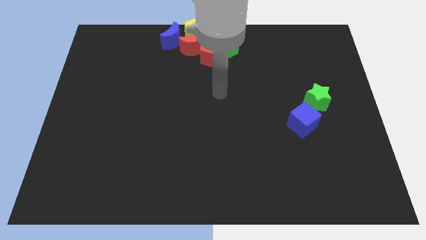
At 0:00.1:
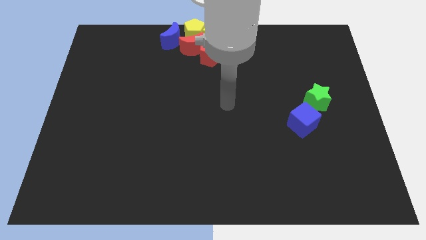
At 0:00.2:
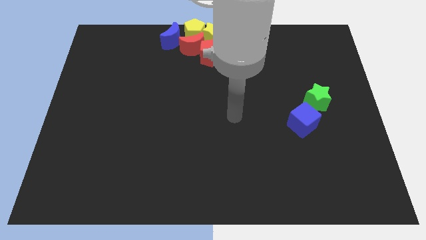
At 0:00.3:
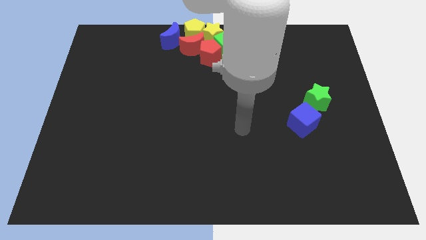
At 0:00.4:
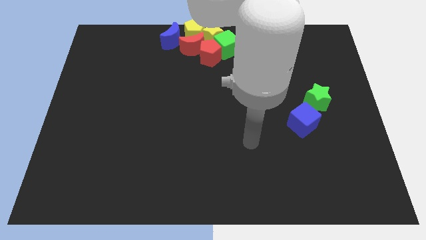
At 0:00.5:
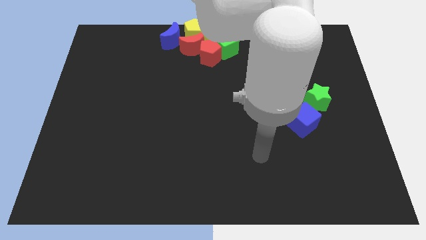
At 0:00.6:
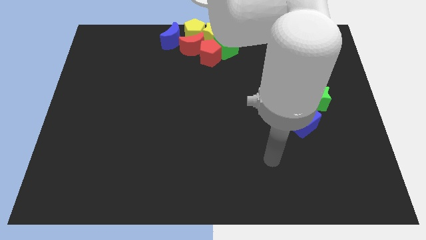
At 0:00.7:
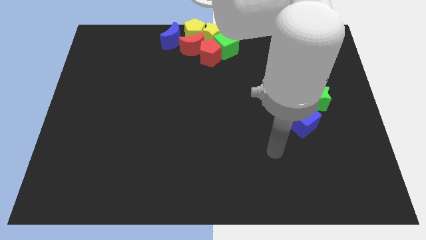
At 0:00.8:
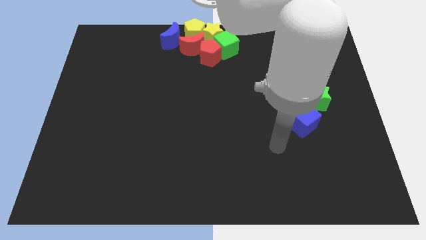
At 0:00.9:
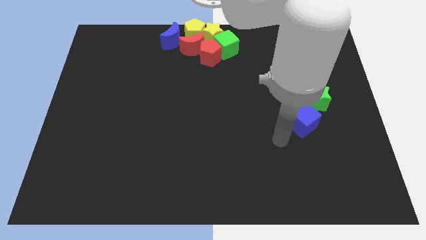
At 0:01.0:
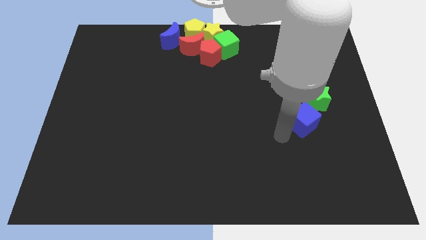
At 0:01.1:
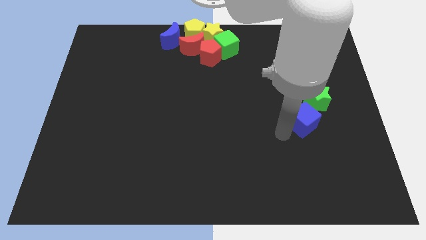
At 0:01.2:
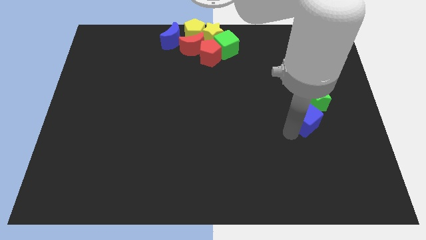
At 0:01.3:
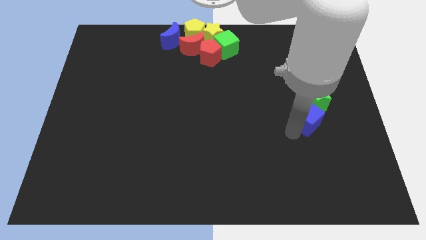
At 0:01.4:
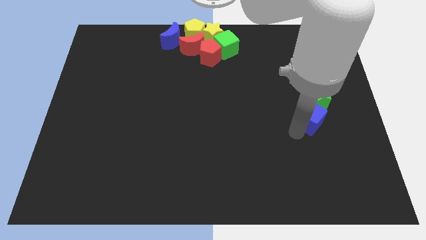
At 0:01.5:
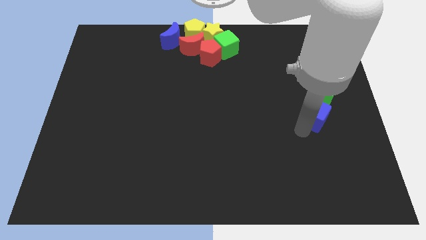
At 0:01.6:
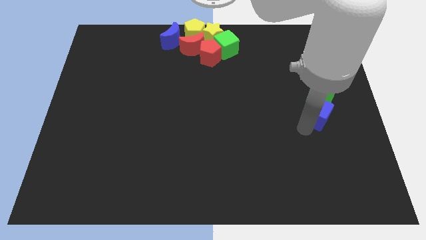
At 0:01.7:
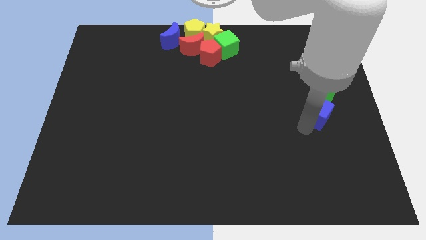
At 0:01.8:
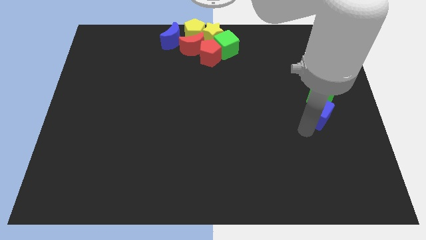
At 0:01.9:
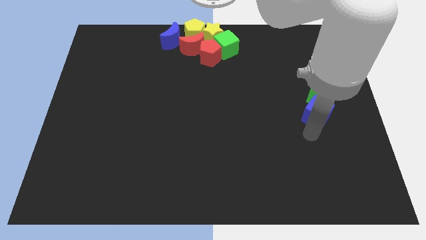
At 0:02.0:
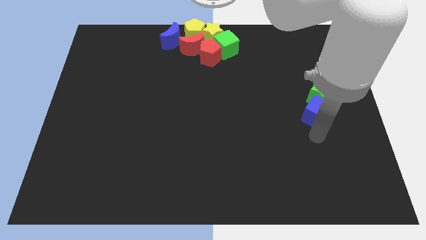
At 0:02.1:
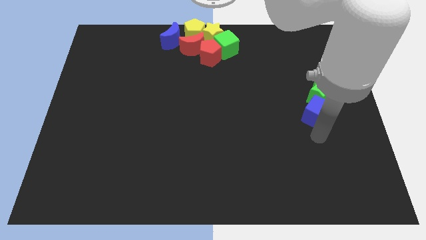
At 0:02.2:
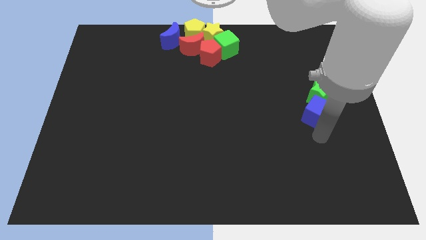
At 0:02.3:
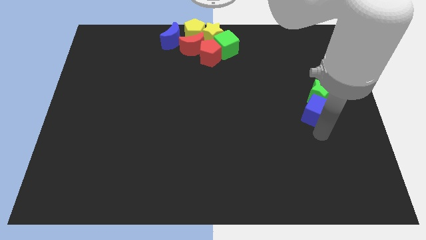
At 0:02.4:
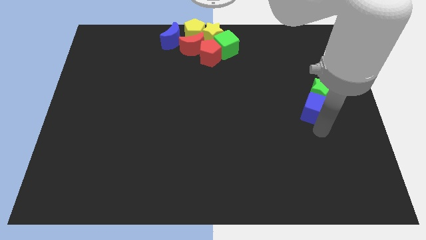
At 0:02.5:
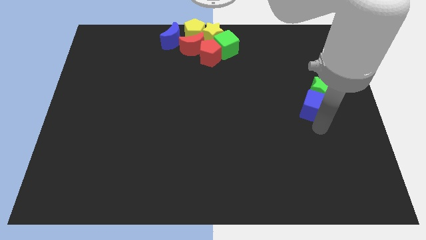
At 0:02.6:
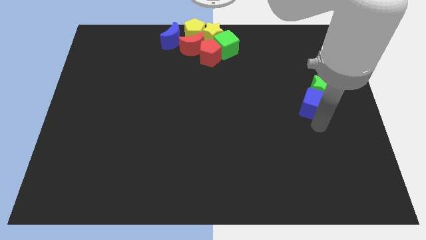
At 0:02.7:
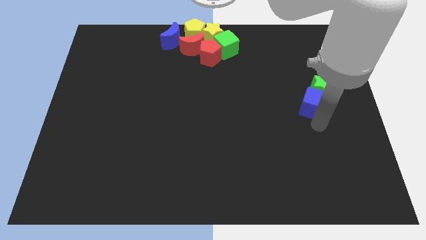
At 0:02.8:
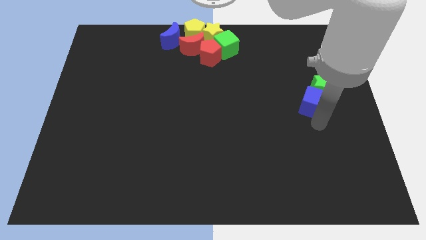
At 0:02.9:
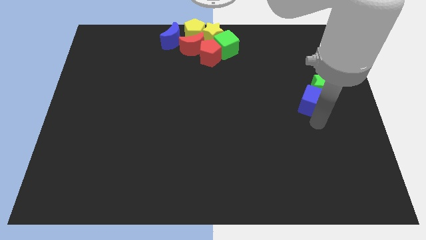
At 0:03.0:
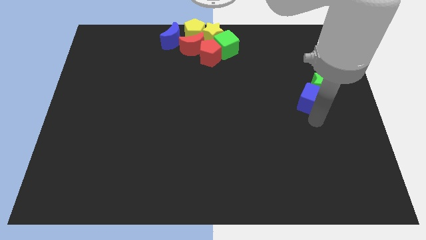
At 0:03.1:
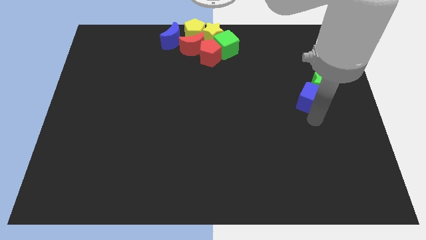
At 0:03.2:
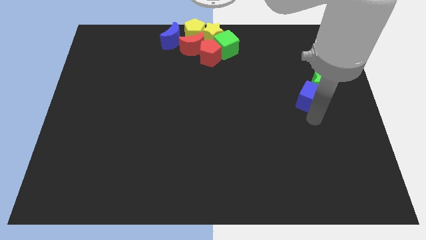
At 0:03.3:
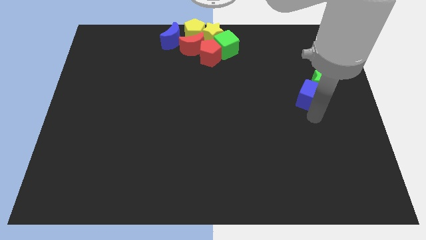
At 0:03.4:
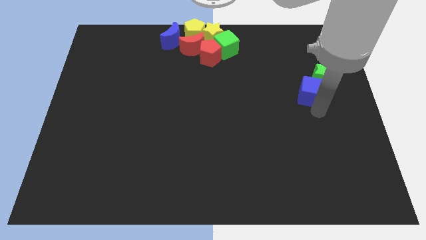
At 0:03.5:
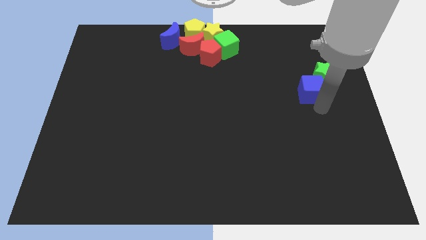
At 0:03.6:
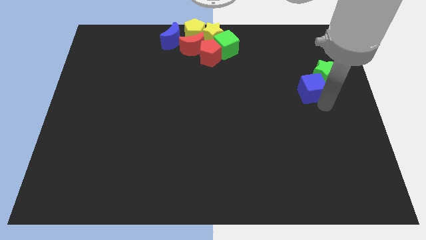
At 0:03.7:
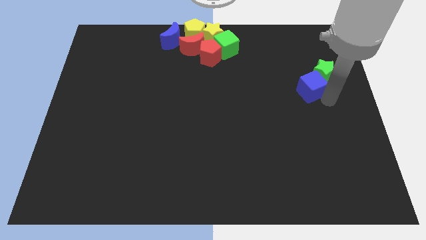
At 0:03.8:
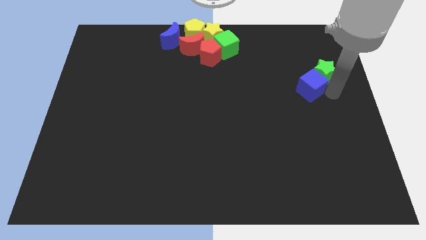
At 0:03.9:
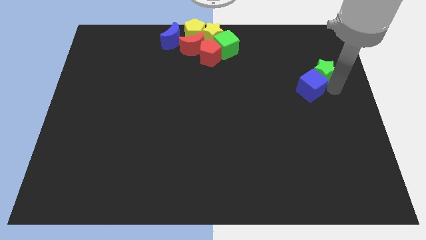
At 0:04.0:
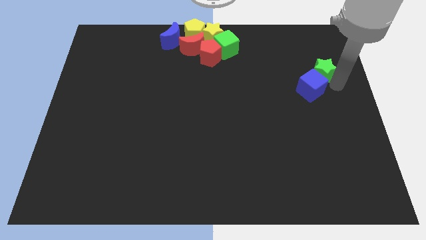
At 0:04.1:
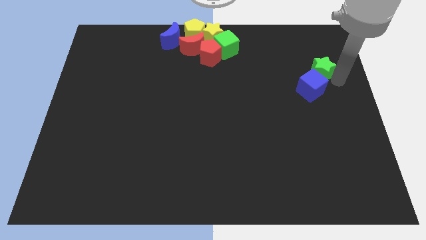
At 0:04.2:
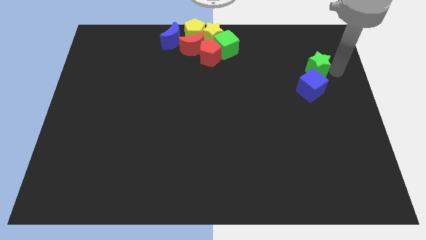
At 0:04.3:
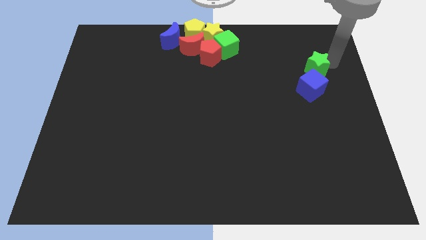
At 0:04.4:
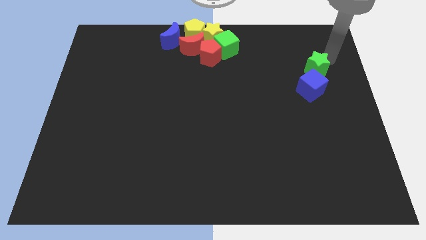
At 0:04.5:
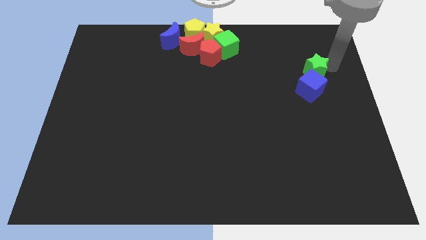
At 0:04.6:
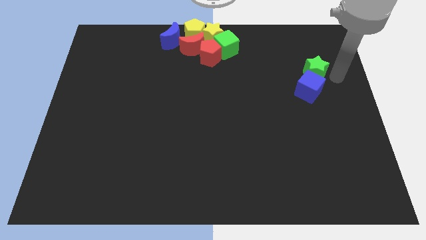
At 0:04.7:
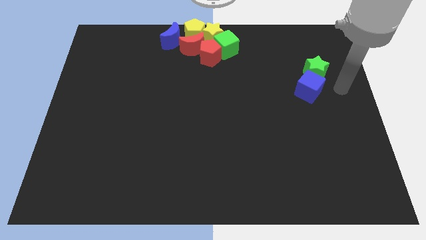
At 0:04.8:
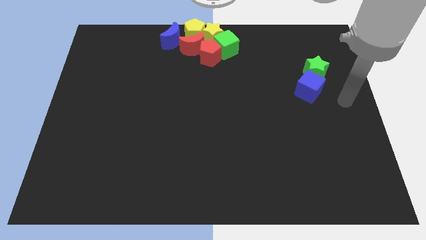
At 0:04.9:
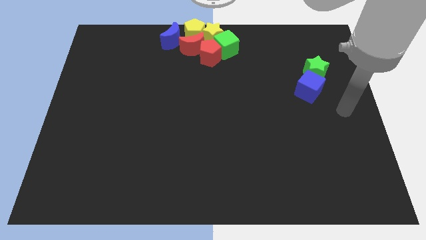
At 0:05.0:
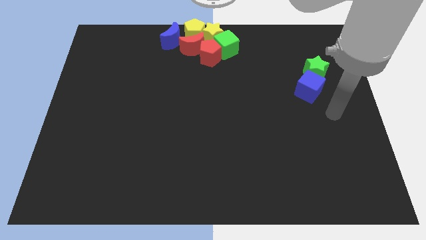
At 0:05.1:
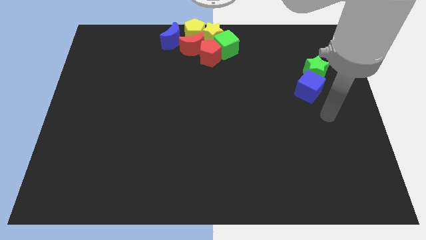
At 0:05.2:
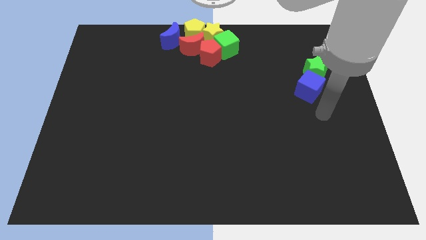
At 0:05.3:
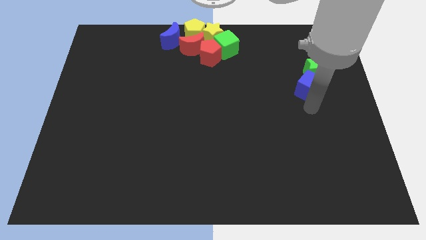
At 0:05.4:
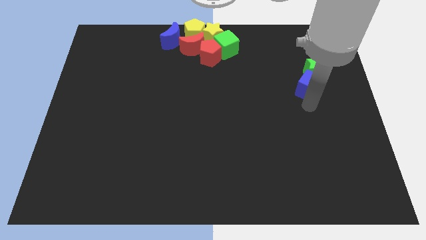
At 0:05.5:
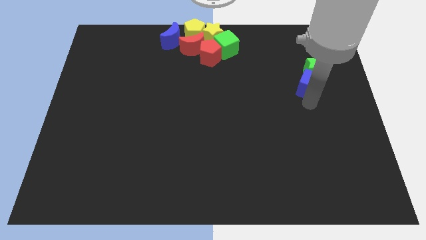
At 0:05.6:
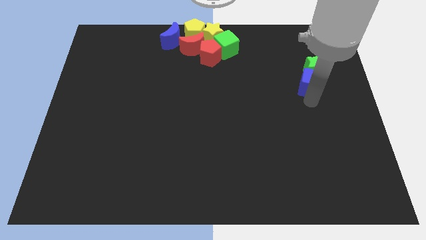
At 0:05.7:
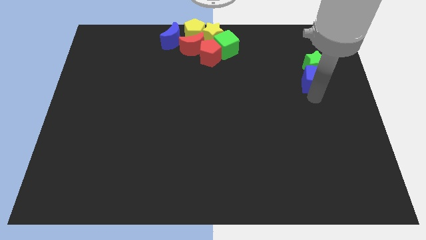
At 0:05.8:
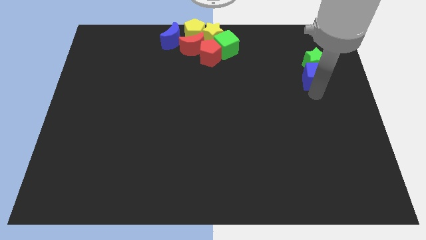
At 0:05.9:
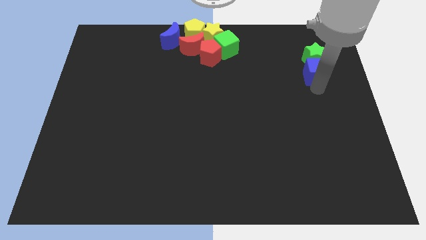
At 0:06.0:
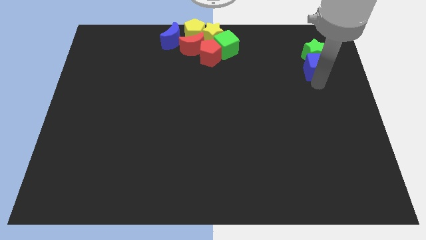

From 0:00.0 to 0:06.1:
push blue cube along with green star towards top right

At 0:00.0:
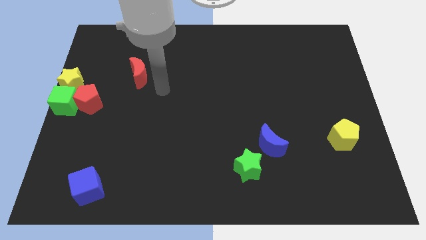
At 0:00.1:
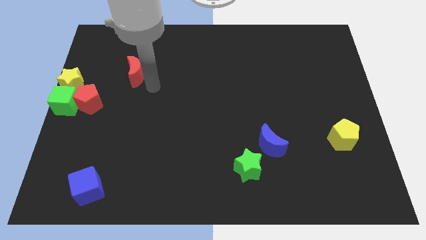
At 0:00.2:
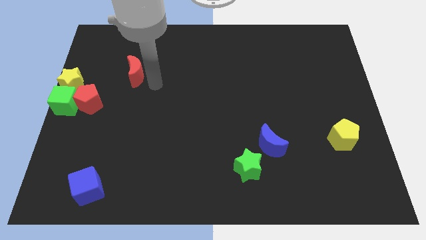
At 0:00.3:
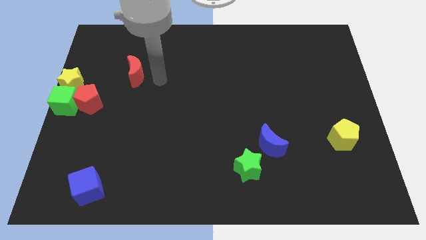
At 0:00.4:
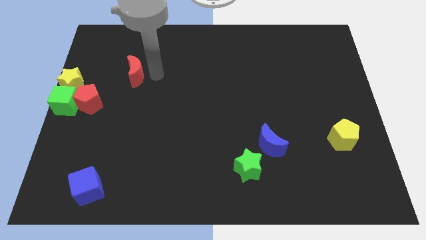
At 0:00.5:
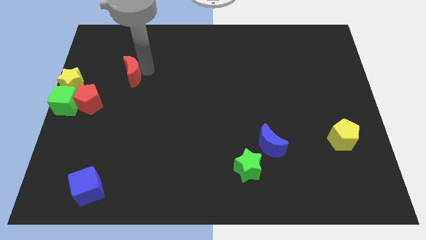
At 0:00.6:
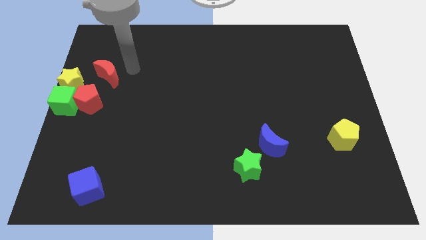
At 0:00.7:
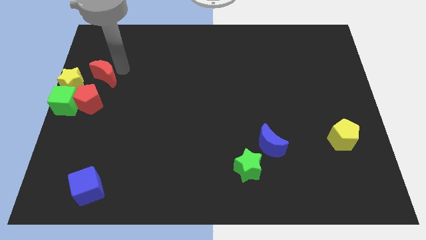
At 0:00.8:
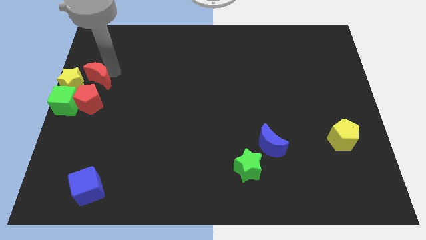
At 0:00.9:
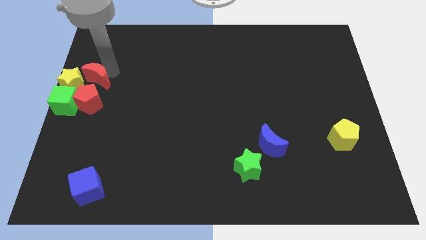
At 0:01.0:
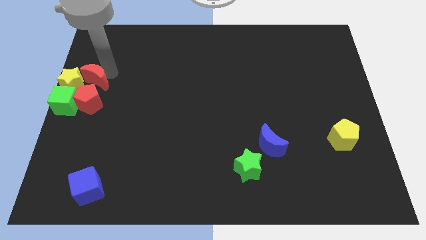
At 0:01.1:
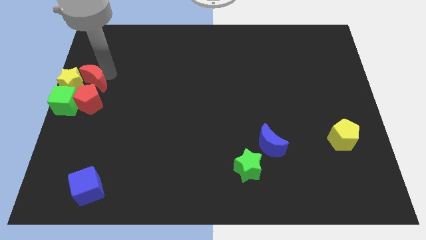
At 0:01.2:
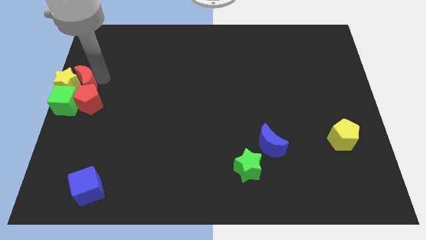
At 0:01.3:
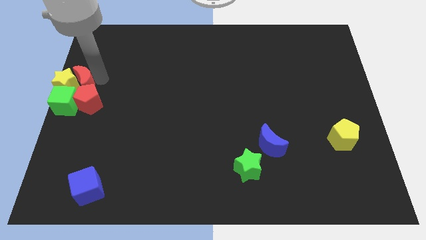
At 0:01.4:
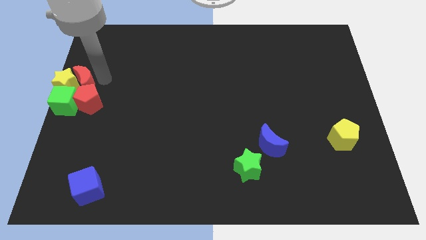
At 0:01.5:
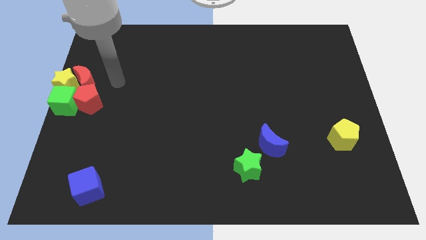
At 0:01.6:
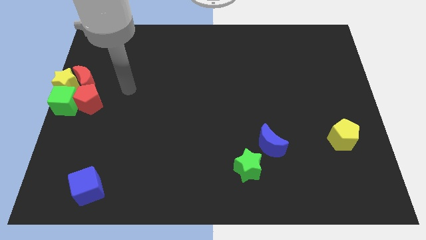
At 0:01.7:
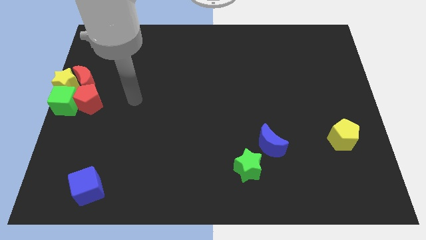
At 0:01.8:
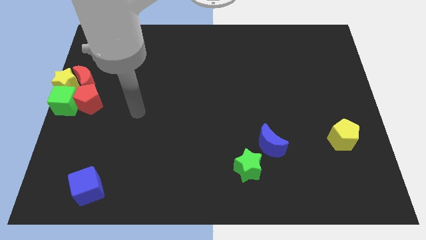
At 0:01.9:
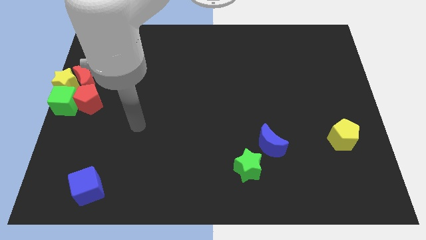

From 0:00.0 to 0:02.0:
push the red crescent into the yellow star

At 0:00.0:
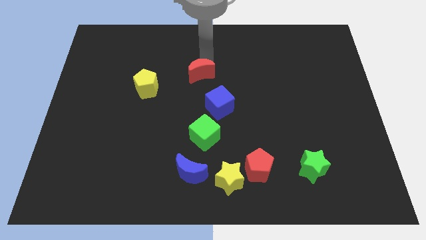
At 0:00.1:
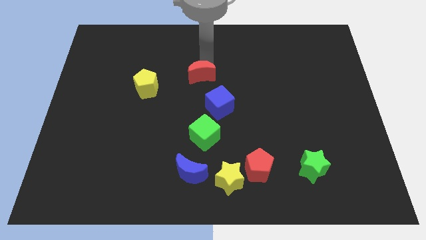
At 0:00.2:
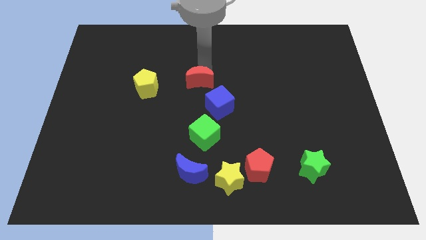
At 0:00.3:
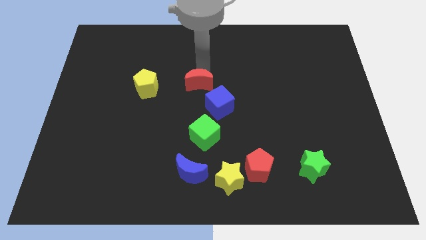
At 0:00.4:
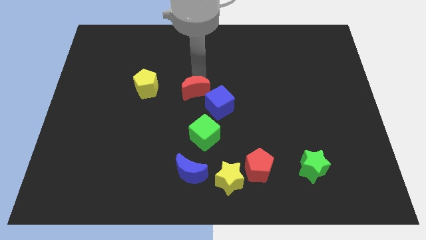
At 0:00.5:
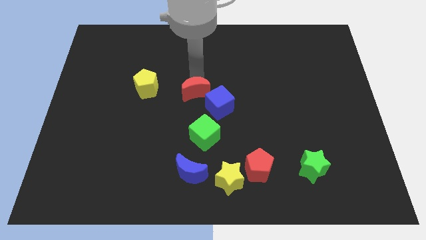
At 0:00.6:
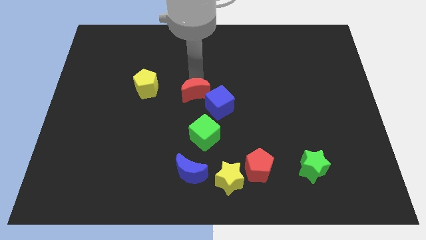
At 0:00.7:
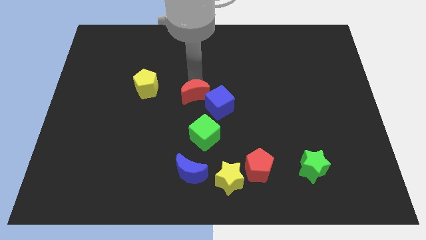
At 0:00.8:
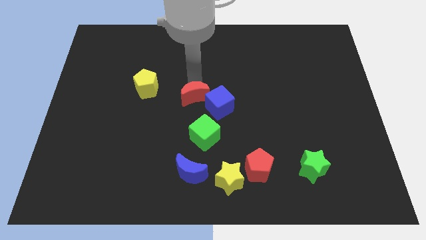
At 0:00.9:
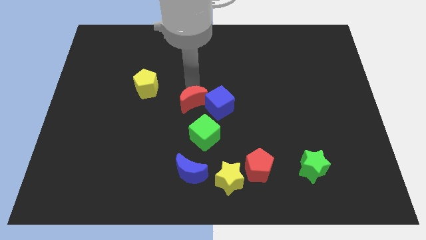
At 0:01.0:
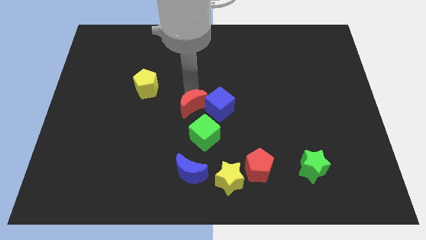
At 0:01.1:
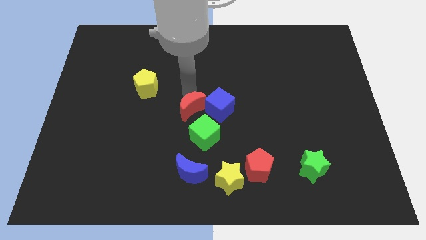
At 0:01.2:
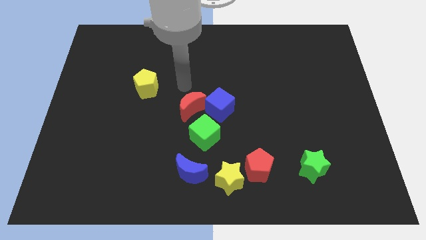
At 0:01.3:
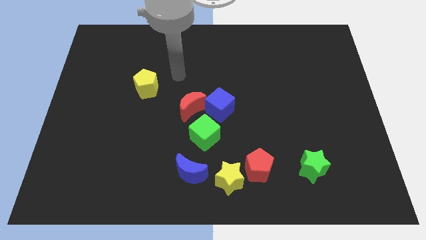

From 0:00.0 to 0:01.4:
push the blue cube with the help of red moon
